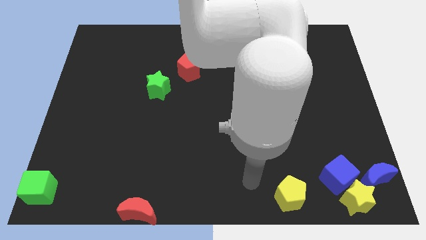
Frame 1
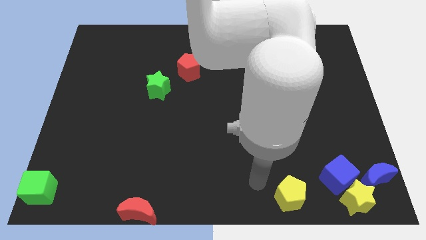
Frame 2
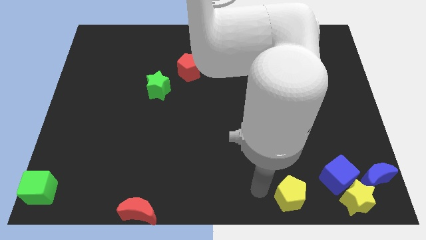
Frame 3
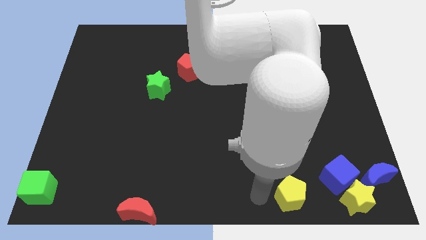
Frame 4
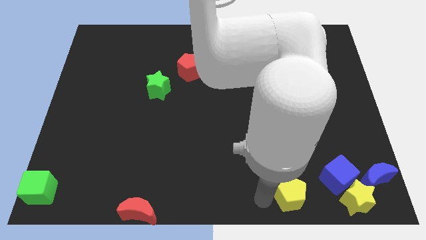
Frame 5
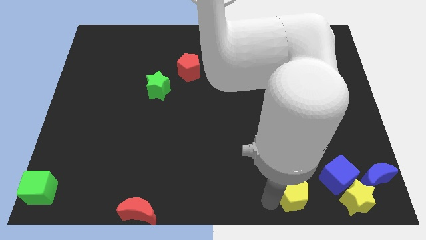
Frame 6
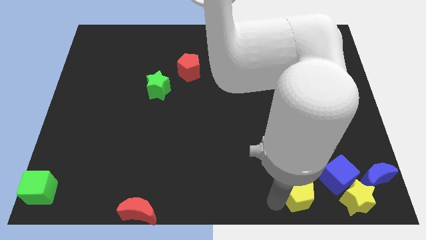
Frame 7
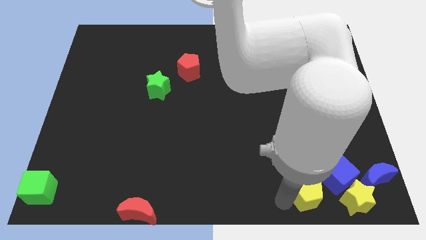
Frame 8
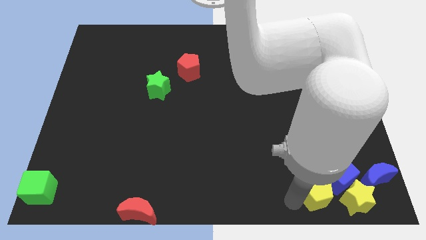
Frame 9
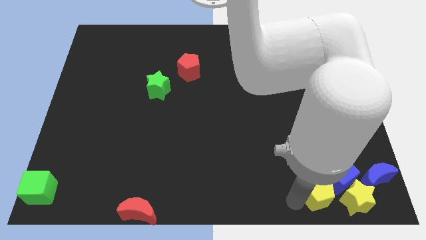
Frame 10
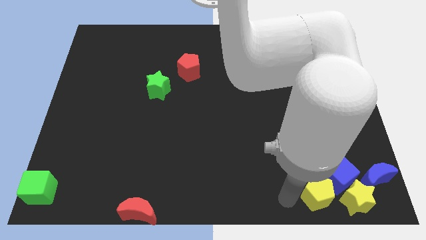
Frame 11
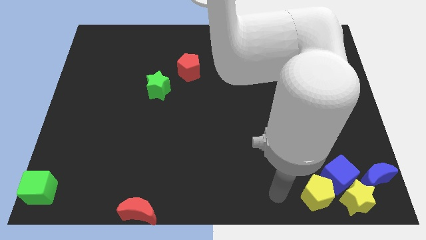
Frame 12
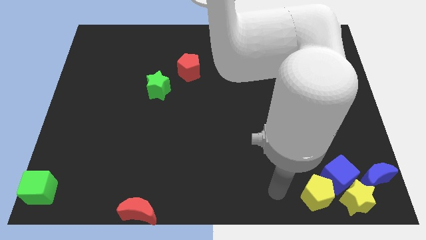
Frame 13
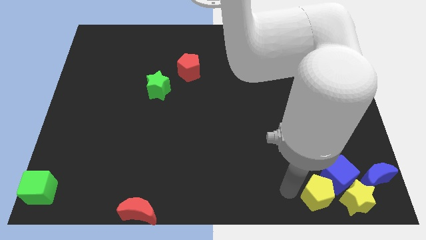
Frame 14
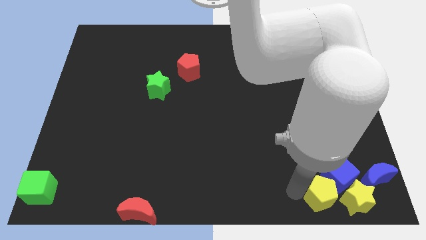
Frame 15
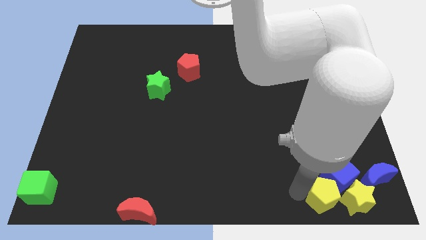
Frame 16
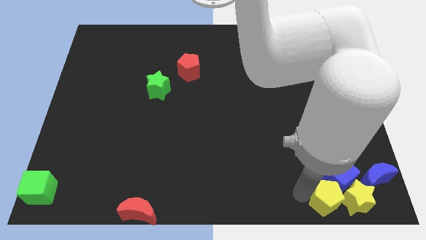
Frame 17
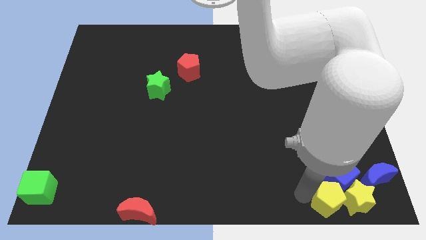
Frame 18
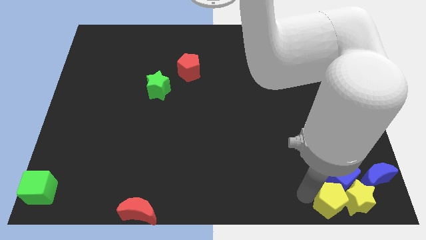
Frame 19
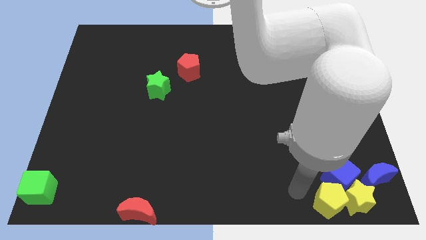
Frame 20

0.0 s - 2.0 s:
group up the yellow block at the bottom right corner

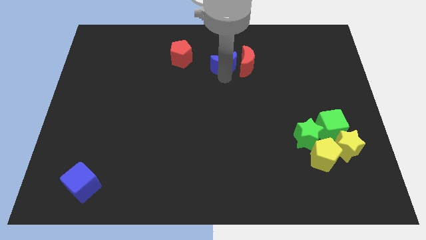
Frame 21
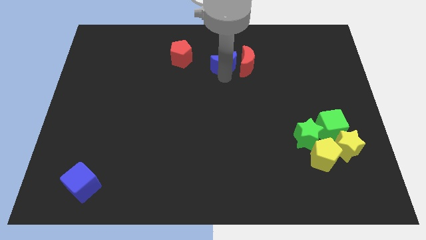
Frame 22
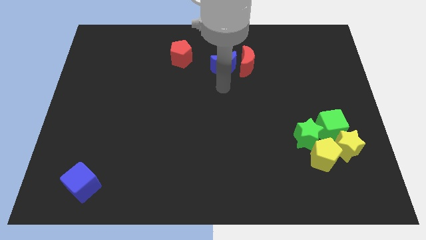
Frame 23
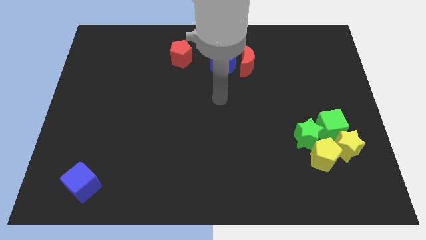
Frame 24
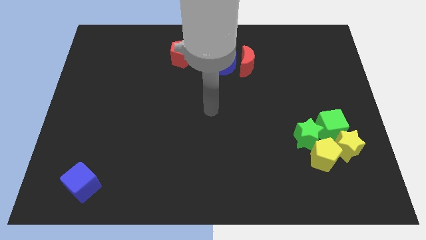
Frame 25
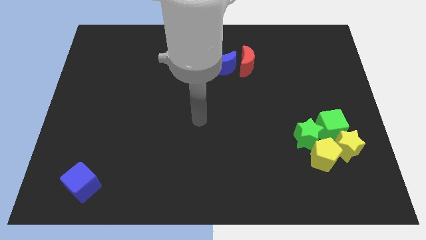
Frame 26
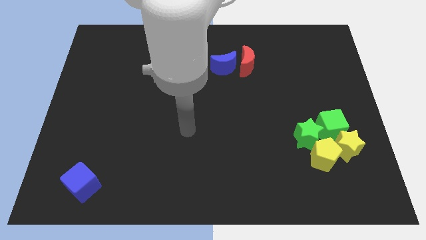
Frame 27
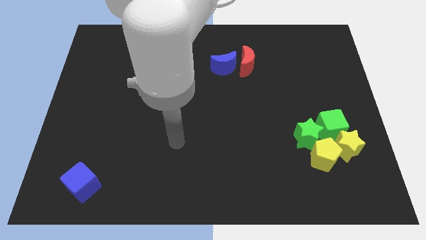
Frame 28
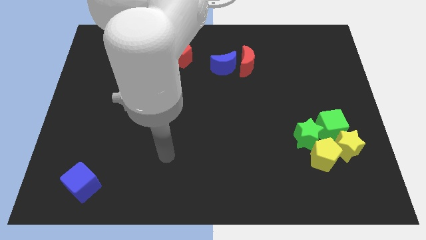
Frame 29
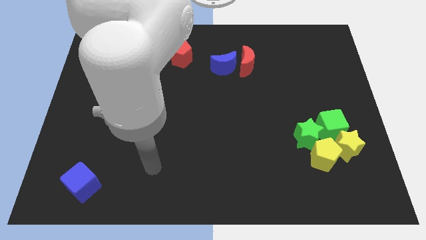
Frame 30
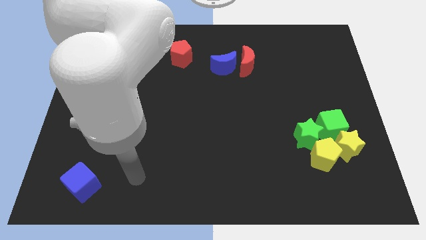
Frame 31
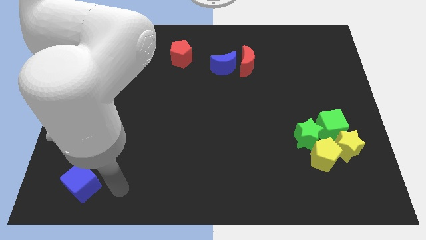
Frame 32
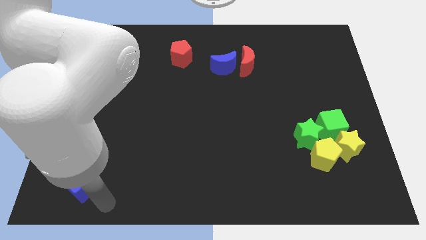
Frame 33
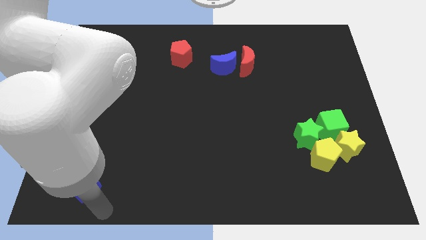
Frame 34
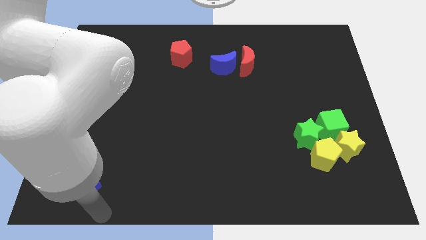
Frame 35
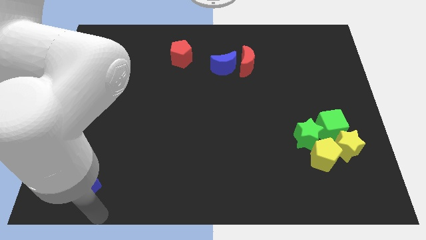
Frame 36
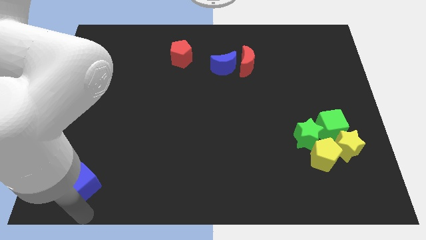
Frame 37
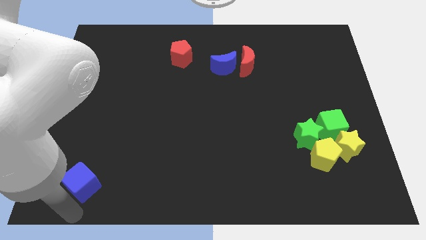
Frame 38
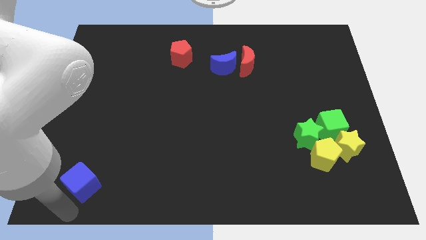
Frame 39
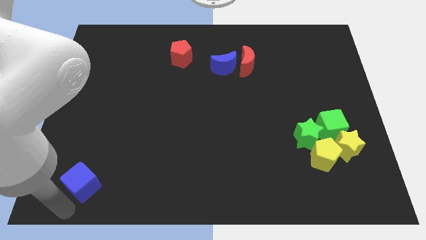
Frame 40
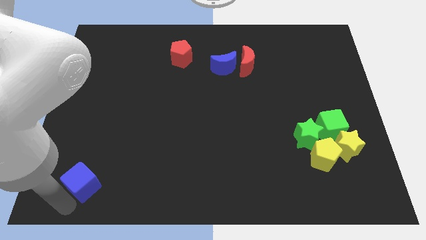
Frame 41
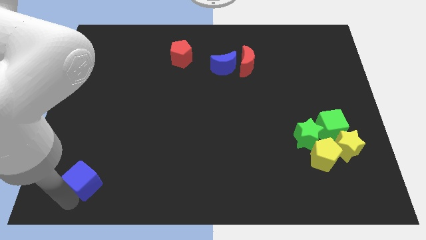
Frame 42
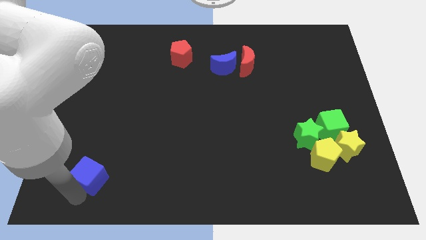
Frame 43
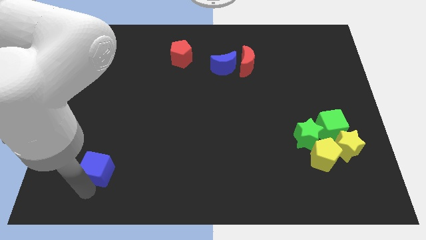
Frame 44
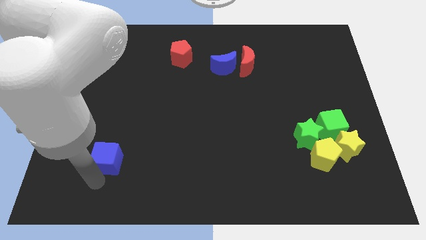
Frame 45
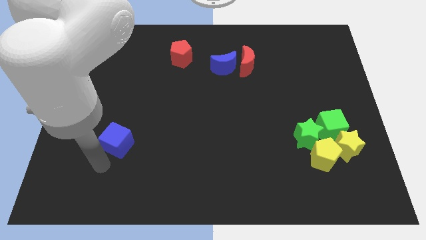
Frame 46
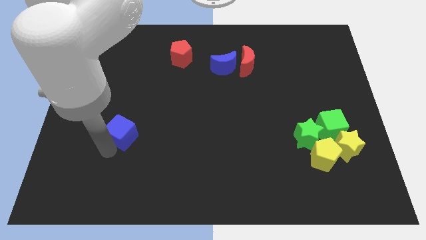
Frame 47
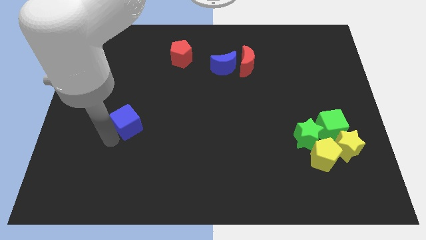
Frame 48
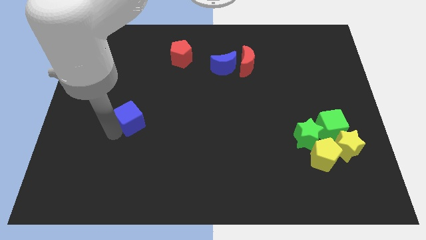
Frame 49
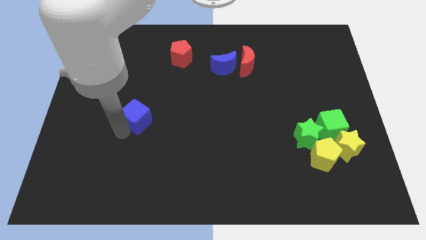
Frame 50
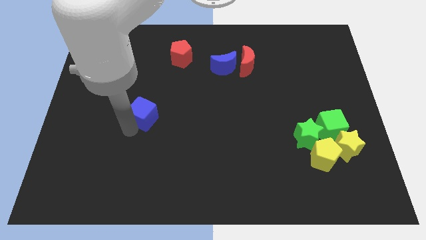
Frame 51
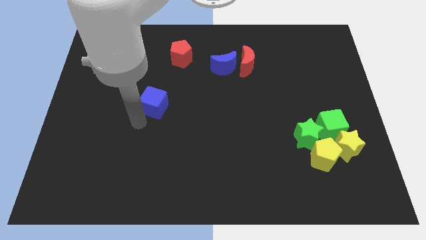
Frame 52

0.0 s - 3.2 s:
place the blue cube diagonal to the blue moon

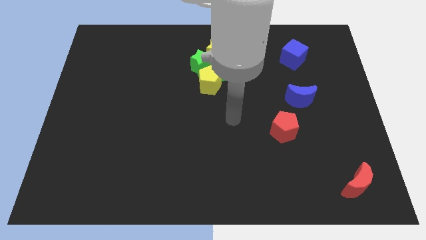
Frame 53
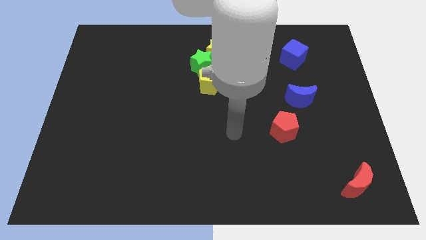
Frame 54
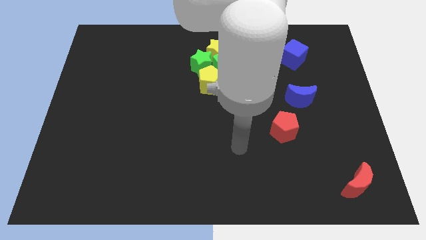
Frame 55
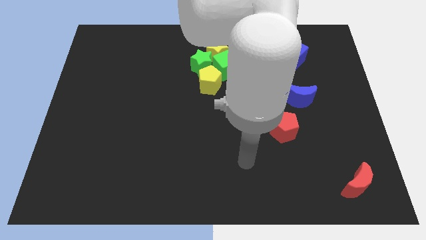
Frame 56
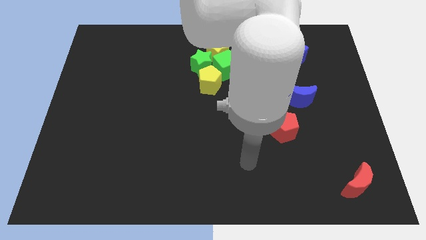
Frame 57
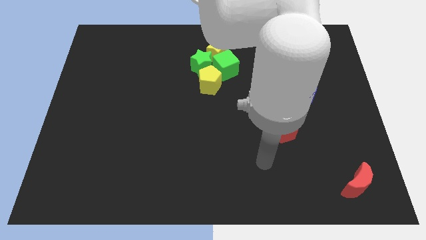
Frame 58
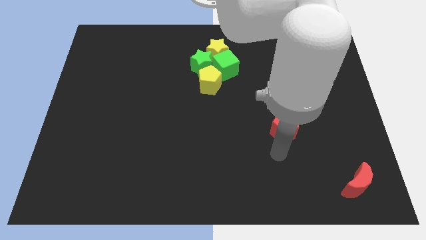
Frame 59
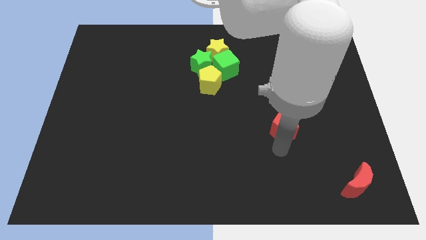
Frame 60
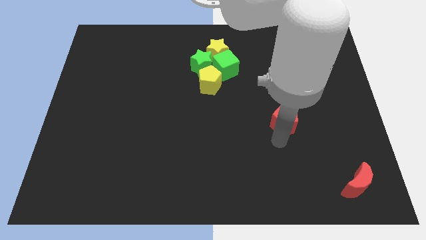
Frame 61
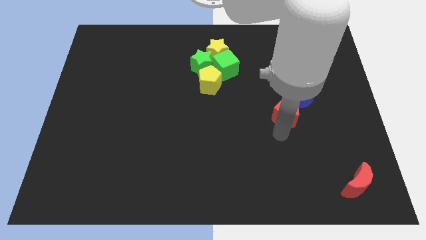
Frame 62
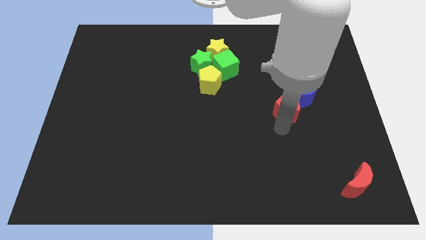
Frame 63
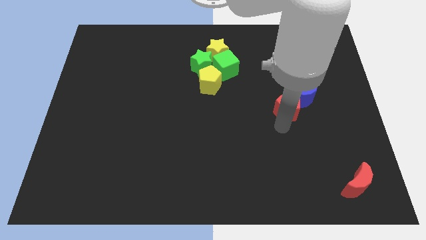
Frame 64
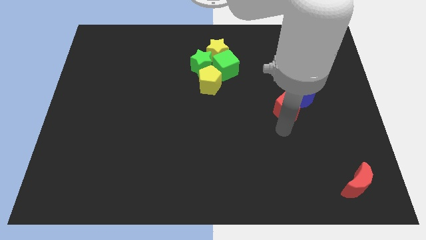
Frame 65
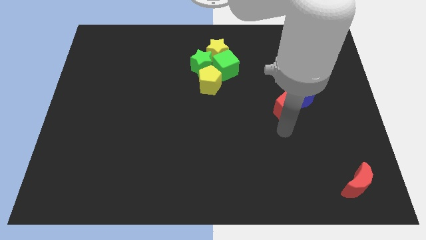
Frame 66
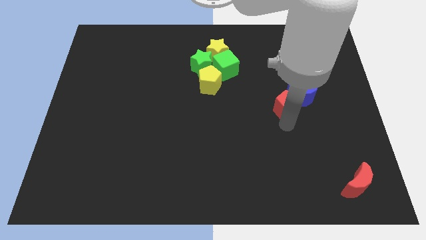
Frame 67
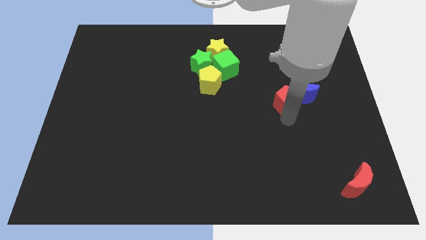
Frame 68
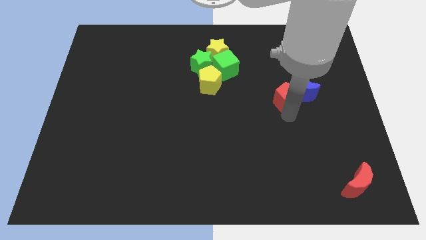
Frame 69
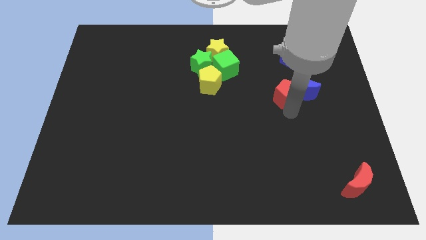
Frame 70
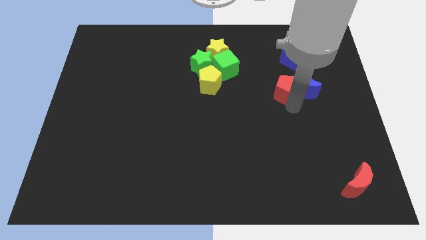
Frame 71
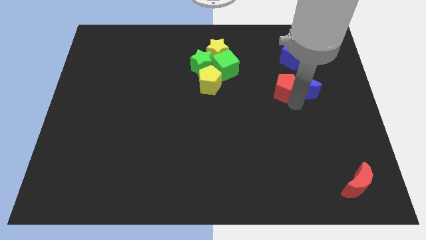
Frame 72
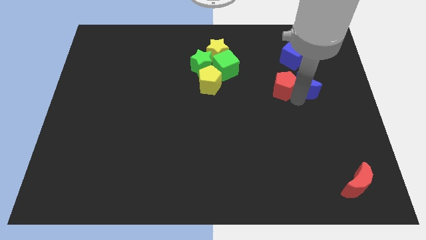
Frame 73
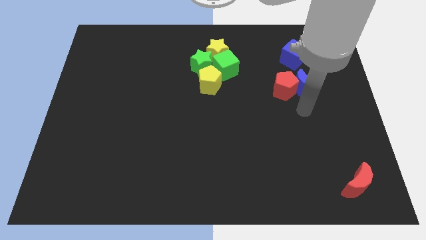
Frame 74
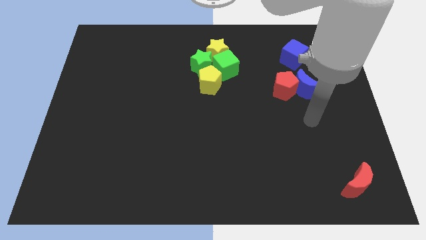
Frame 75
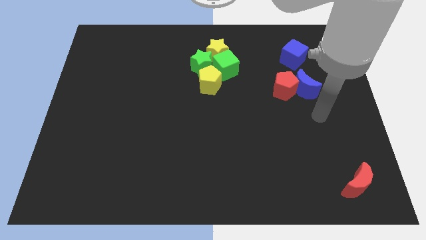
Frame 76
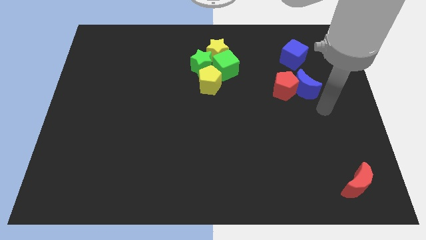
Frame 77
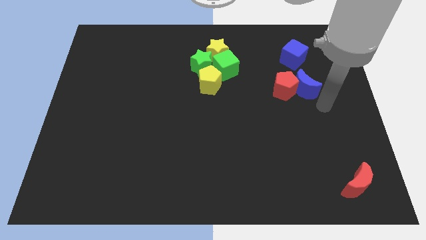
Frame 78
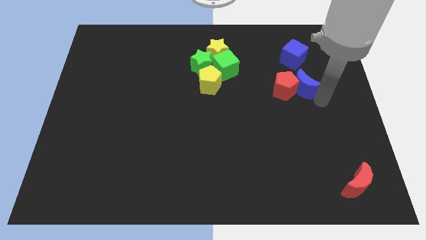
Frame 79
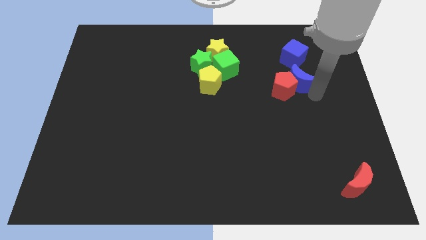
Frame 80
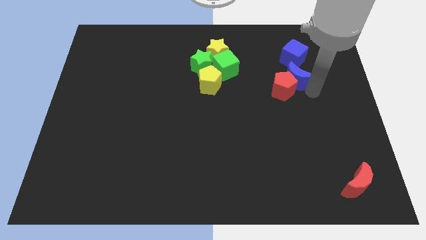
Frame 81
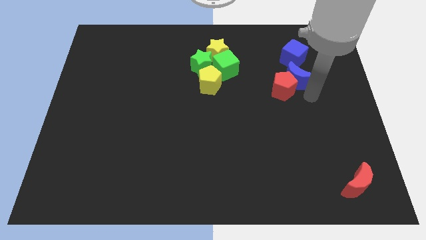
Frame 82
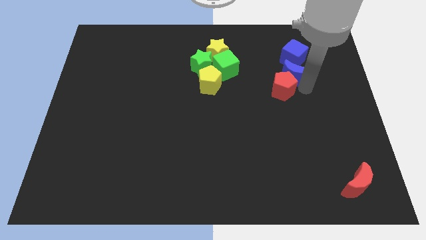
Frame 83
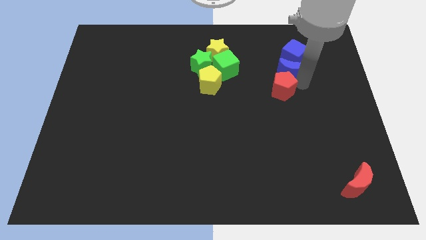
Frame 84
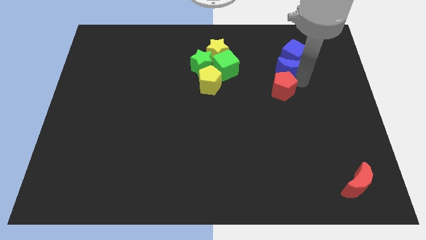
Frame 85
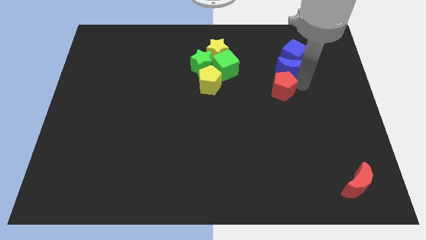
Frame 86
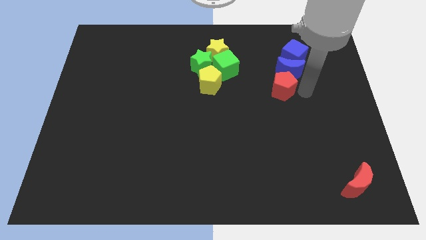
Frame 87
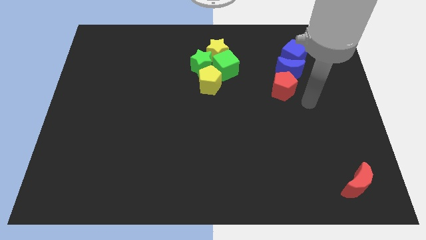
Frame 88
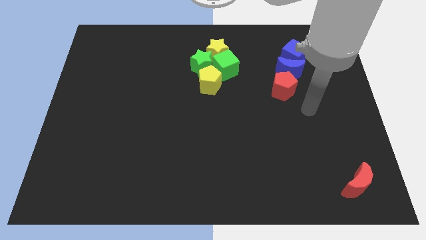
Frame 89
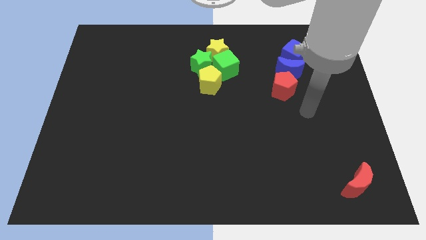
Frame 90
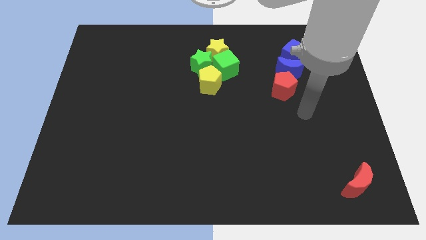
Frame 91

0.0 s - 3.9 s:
move the blue moon and red pentagon below the blue cube
